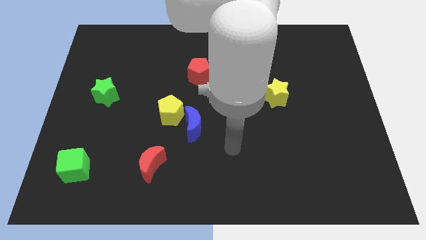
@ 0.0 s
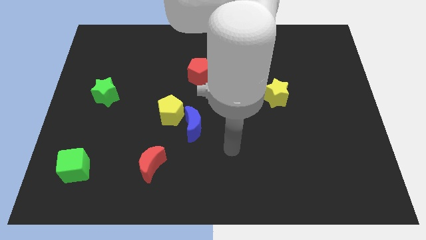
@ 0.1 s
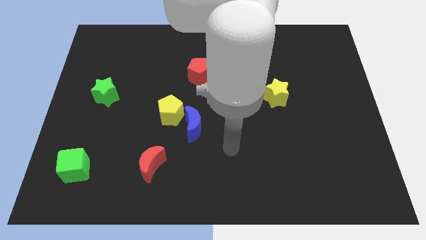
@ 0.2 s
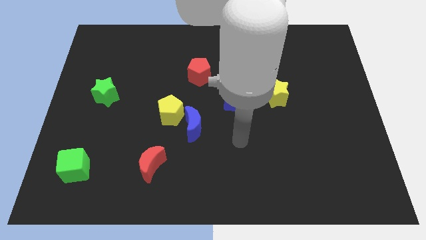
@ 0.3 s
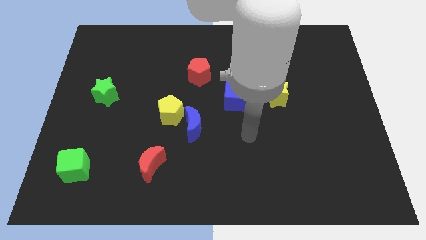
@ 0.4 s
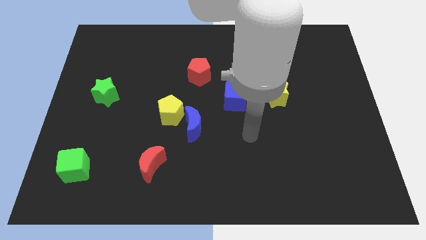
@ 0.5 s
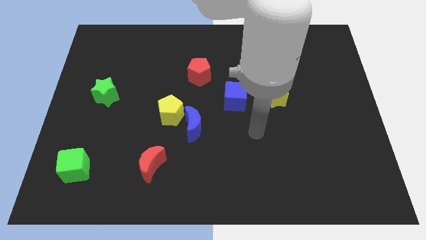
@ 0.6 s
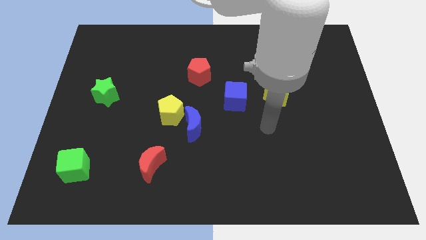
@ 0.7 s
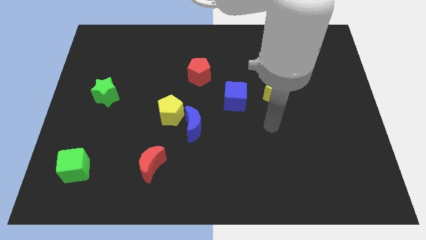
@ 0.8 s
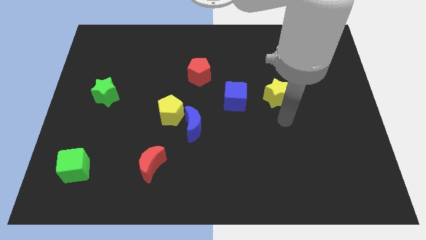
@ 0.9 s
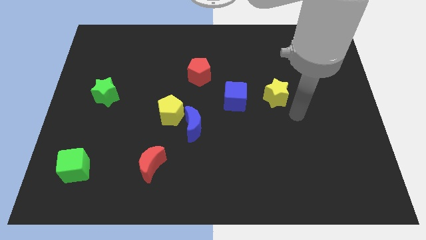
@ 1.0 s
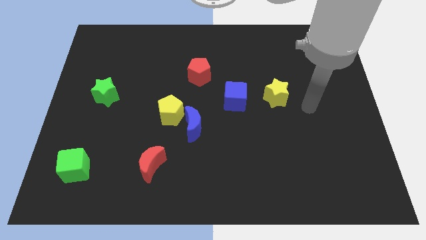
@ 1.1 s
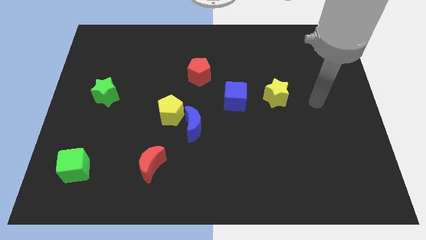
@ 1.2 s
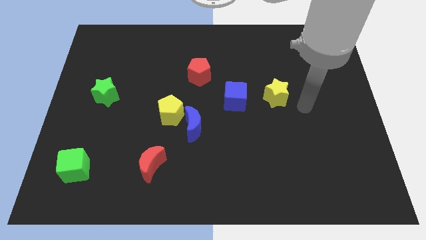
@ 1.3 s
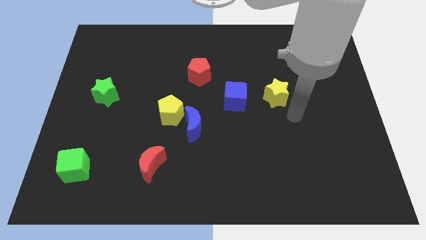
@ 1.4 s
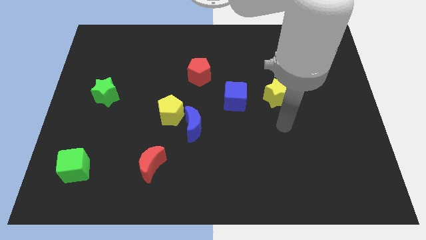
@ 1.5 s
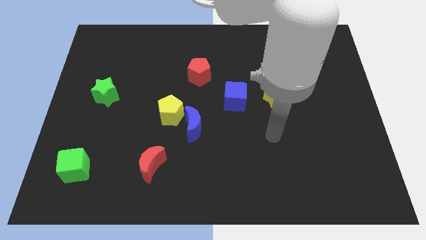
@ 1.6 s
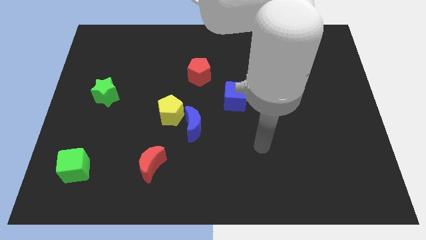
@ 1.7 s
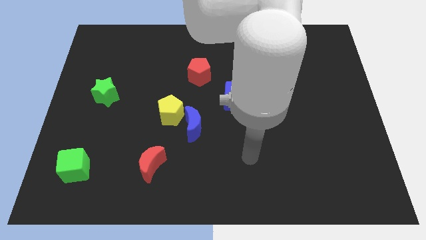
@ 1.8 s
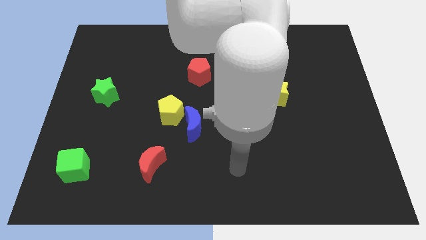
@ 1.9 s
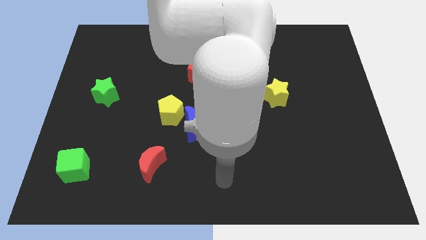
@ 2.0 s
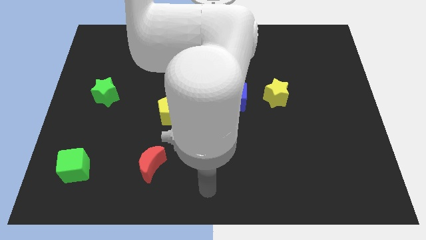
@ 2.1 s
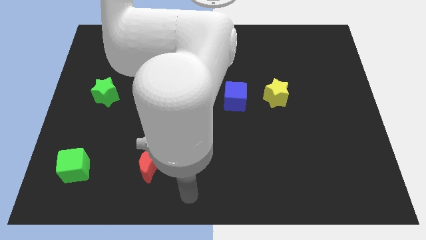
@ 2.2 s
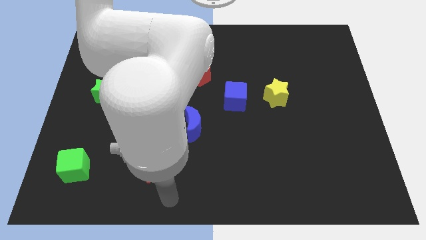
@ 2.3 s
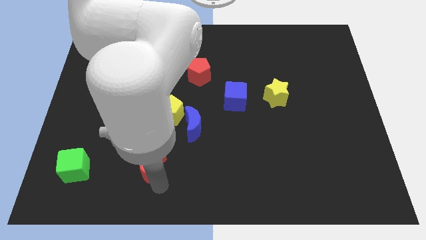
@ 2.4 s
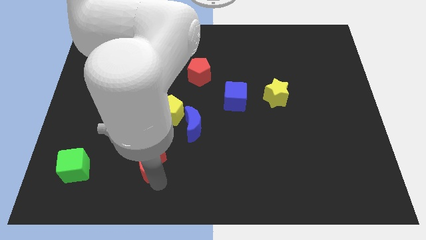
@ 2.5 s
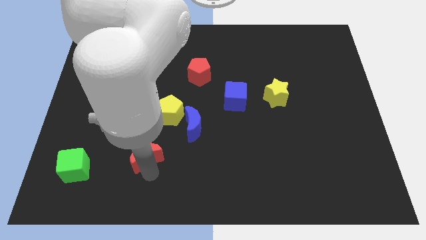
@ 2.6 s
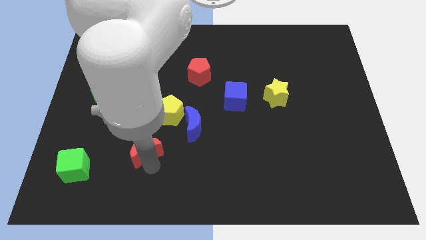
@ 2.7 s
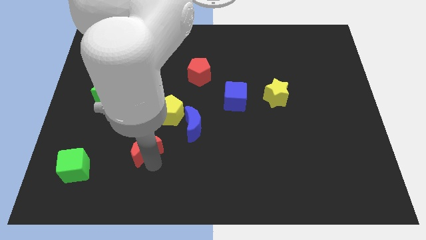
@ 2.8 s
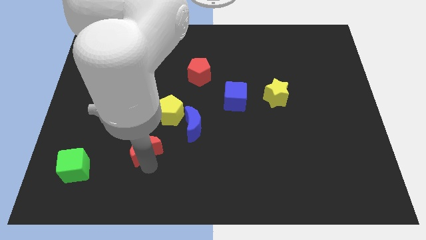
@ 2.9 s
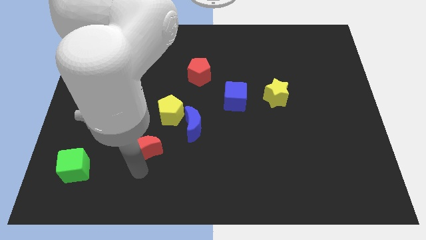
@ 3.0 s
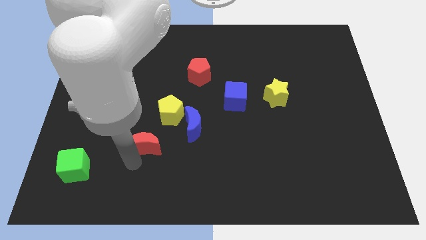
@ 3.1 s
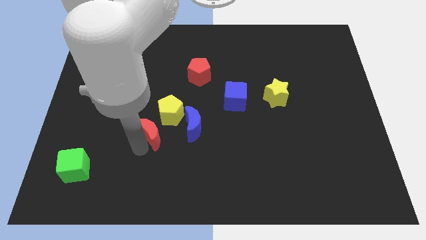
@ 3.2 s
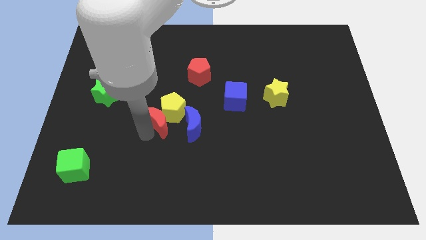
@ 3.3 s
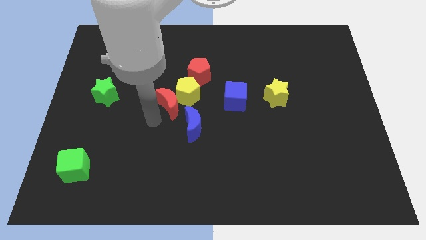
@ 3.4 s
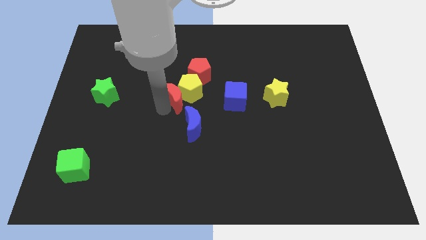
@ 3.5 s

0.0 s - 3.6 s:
move the red moon into the yellow pentagon

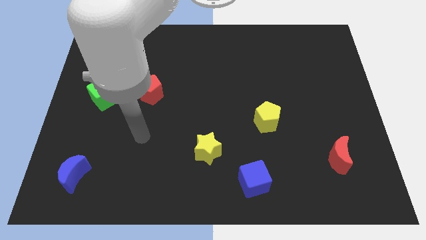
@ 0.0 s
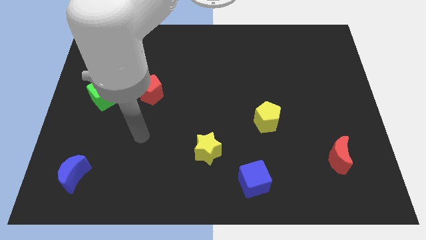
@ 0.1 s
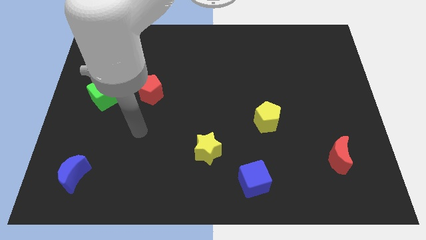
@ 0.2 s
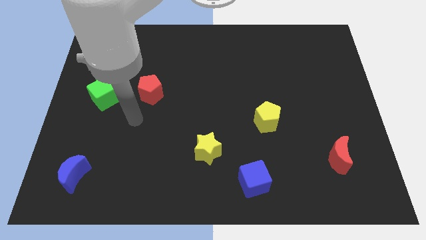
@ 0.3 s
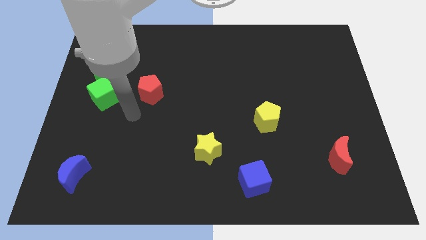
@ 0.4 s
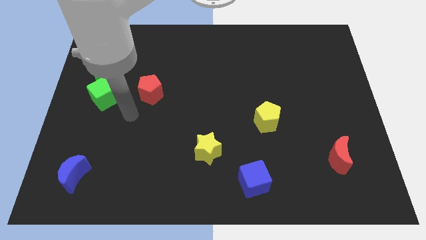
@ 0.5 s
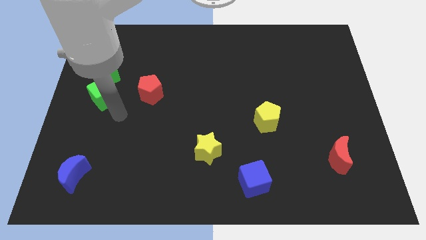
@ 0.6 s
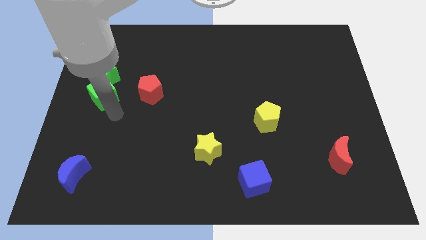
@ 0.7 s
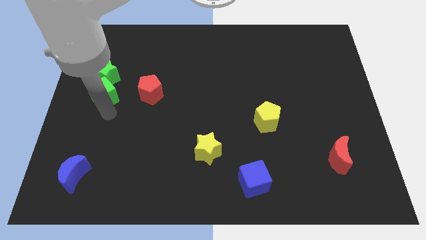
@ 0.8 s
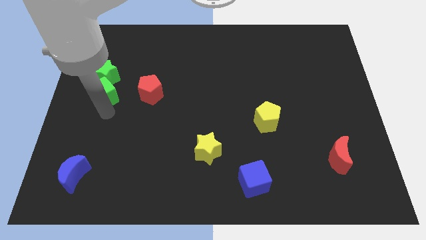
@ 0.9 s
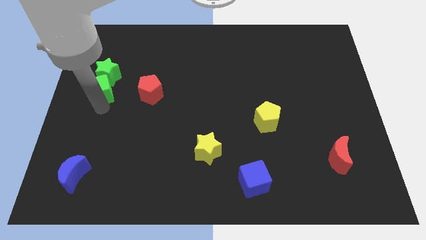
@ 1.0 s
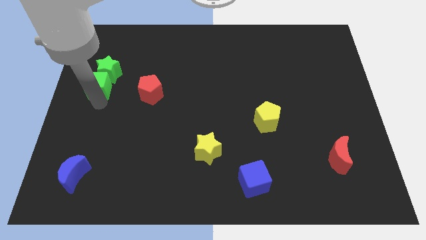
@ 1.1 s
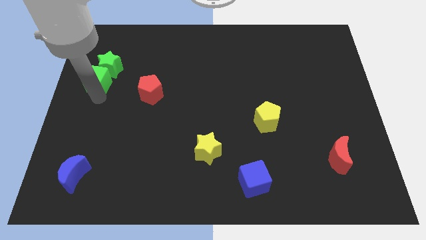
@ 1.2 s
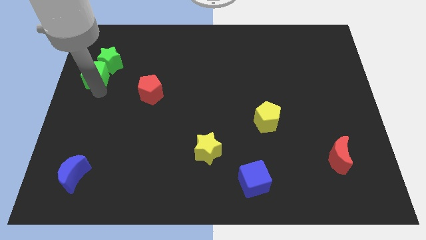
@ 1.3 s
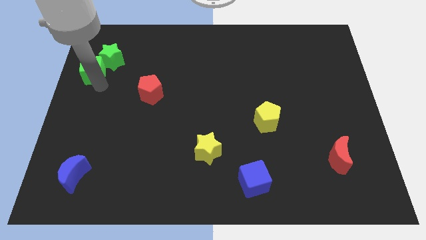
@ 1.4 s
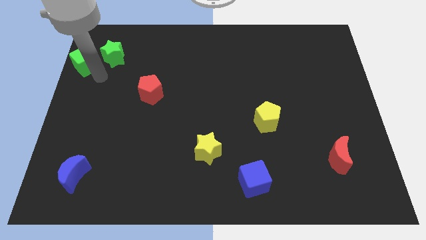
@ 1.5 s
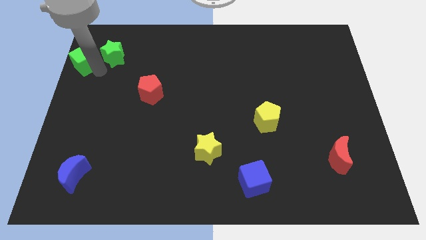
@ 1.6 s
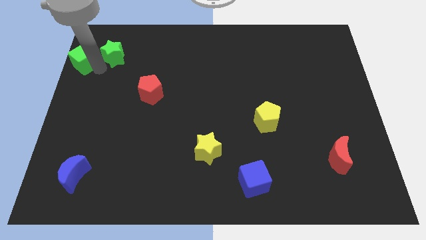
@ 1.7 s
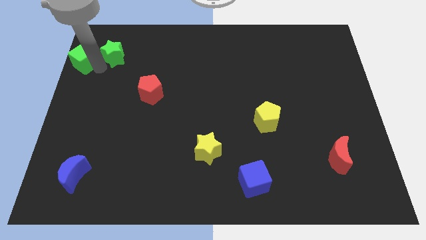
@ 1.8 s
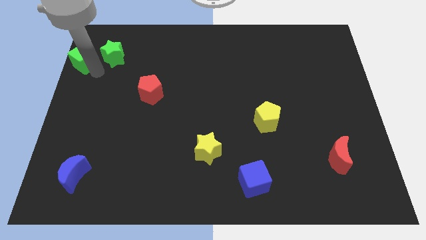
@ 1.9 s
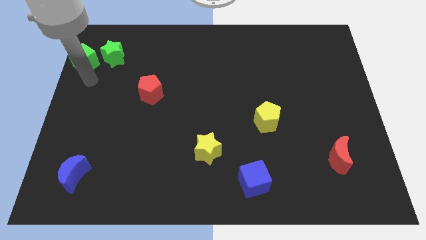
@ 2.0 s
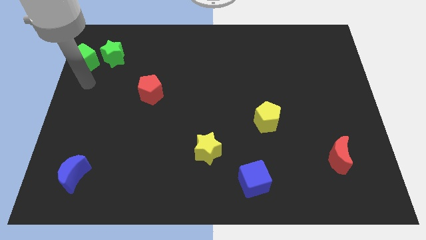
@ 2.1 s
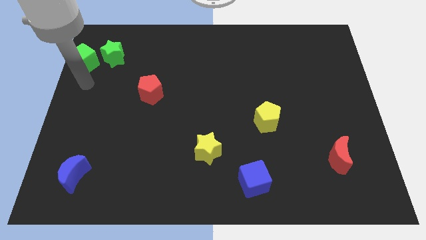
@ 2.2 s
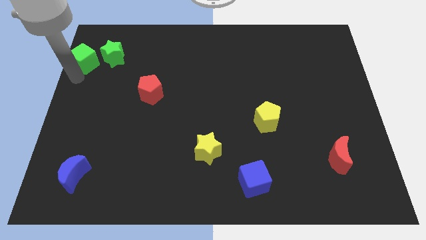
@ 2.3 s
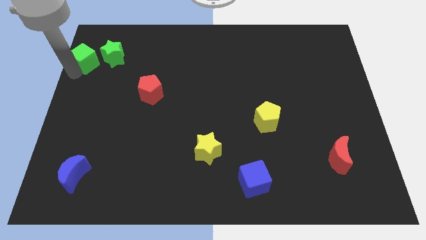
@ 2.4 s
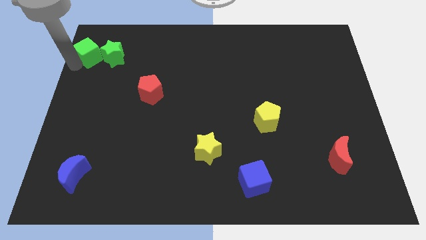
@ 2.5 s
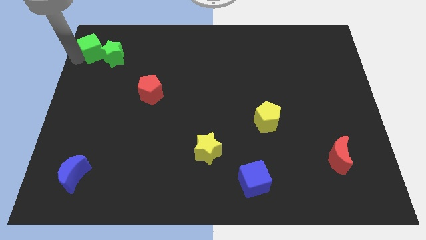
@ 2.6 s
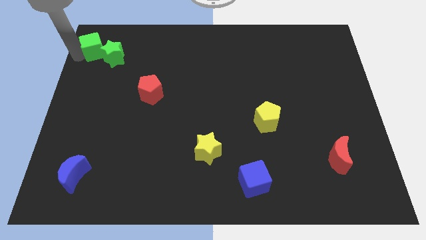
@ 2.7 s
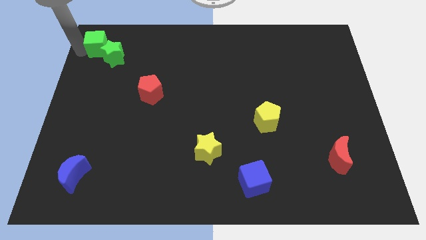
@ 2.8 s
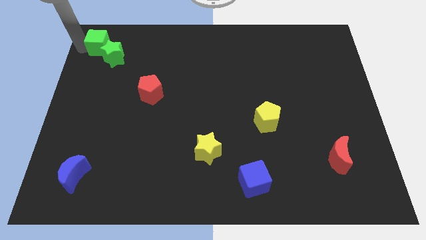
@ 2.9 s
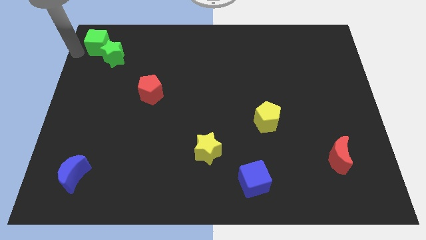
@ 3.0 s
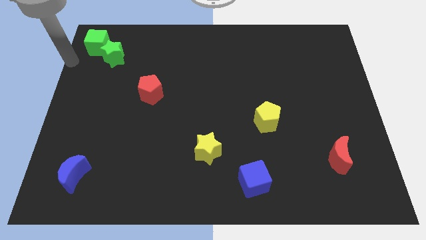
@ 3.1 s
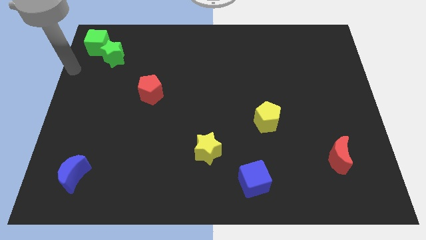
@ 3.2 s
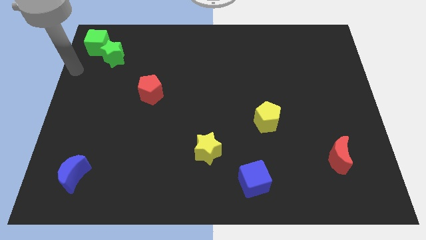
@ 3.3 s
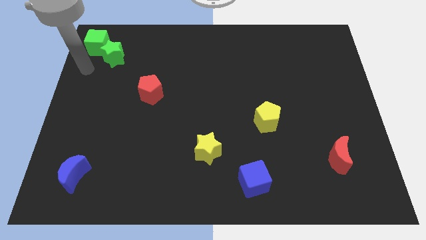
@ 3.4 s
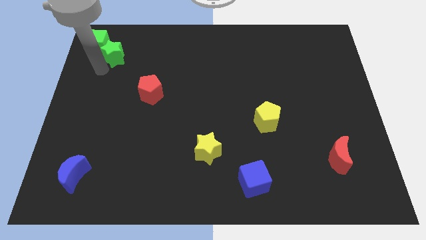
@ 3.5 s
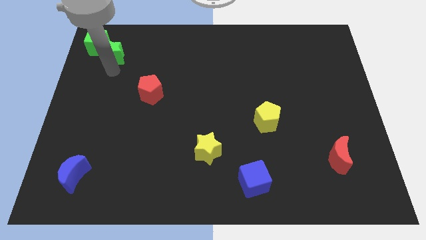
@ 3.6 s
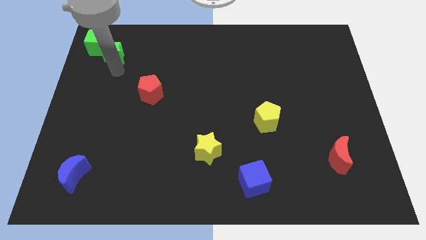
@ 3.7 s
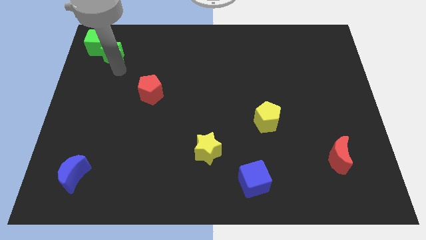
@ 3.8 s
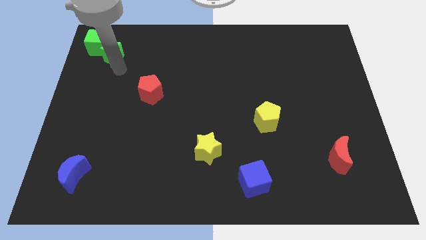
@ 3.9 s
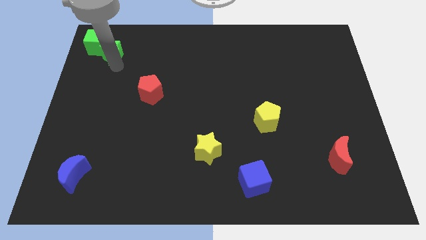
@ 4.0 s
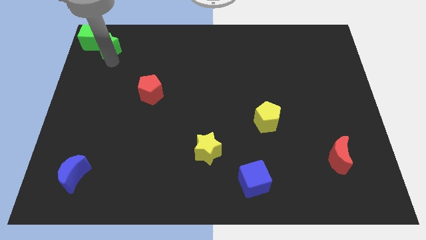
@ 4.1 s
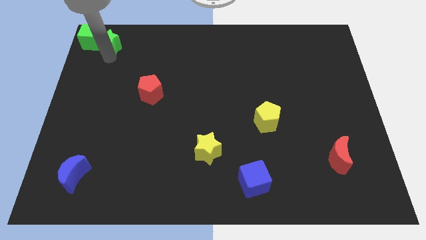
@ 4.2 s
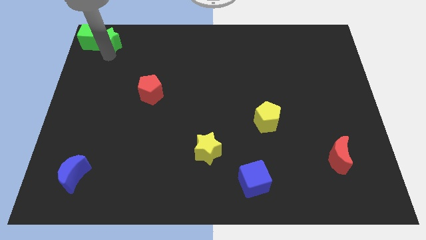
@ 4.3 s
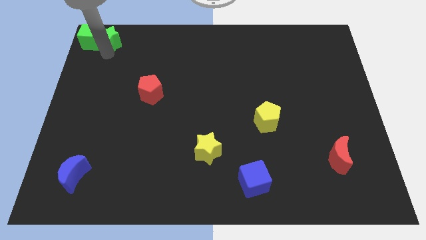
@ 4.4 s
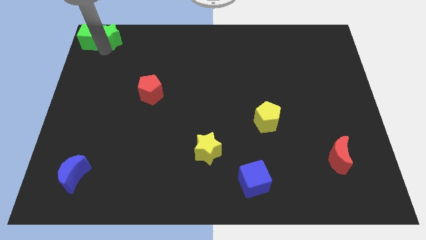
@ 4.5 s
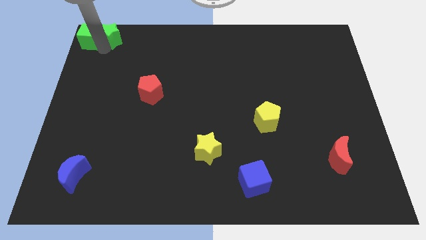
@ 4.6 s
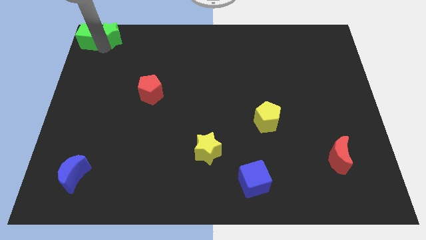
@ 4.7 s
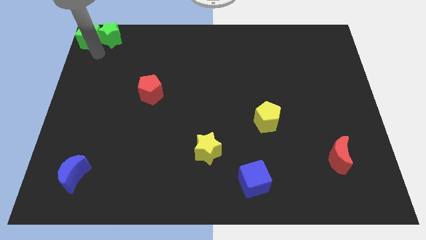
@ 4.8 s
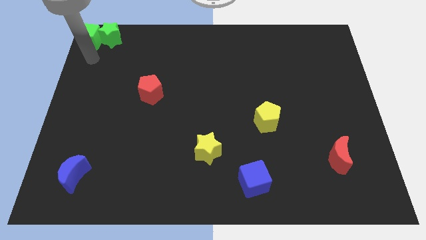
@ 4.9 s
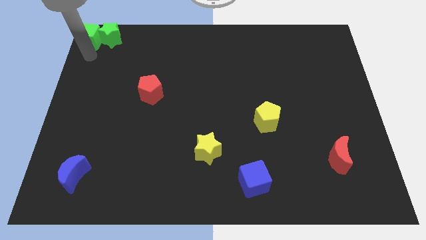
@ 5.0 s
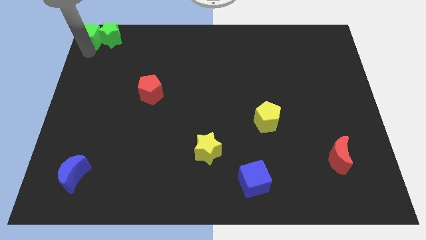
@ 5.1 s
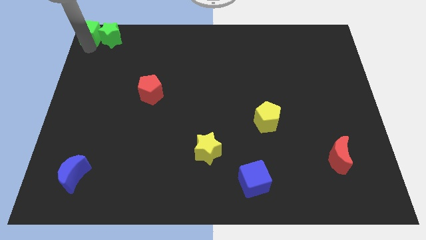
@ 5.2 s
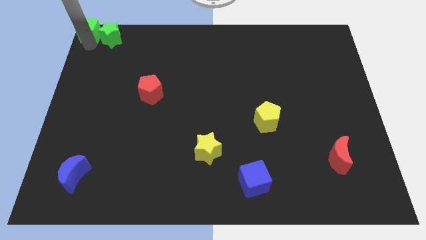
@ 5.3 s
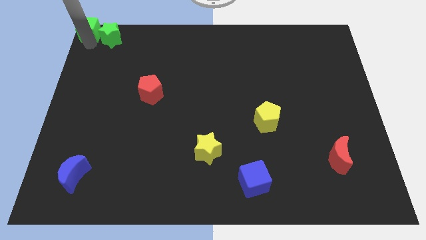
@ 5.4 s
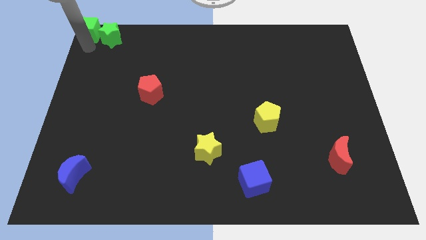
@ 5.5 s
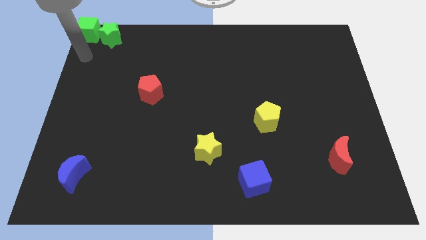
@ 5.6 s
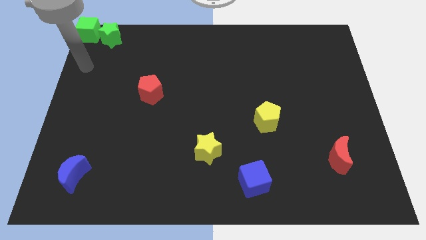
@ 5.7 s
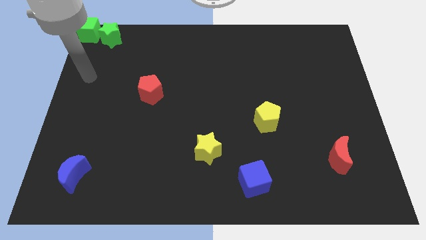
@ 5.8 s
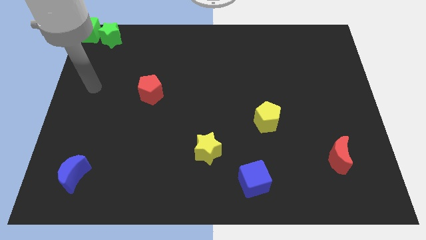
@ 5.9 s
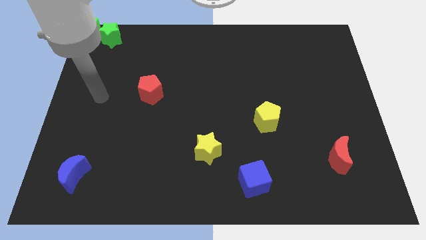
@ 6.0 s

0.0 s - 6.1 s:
place the green blocks at the top left corner of the board
